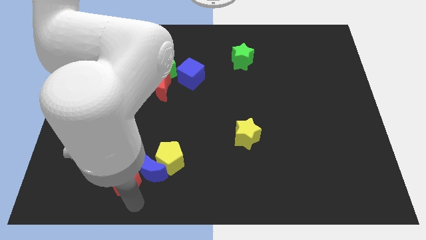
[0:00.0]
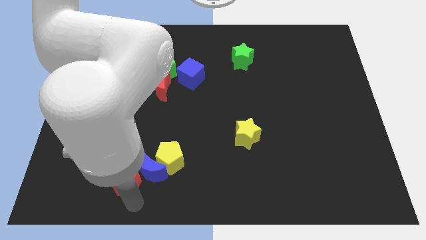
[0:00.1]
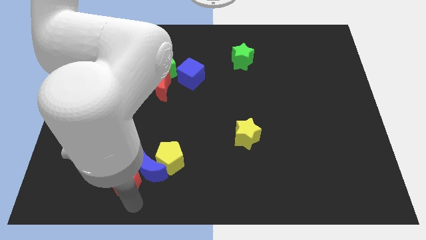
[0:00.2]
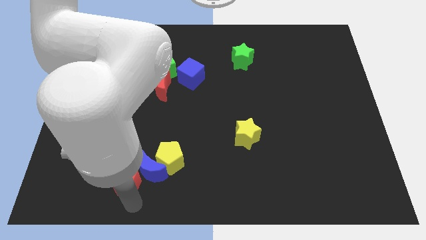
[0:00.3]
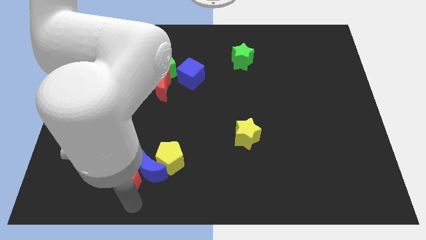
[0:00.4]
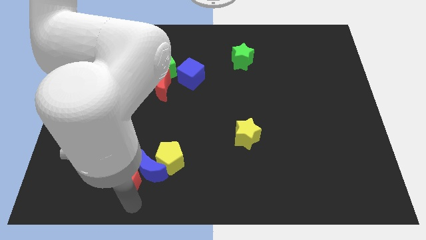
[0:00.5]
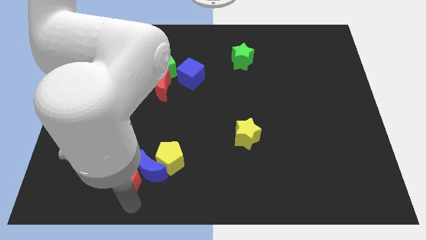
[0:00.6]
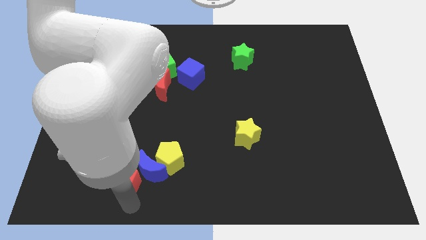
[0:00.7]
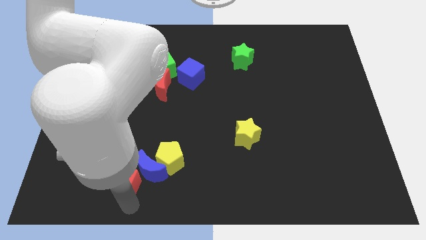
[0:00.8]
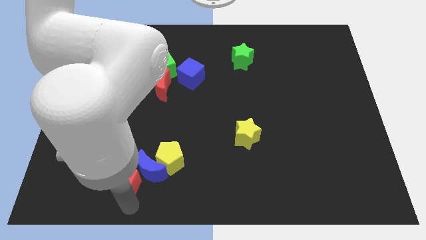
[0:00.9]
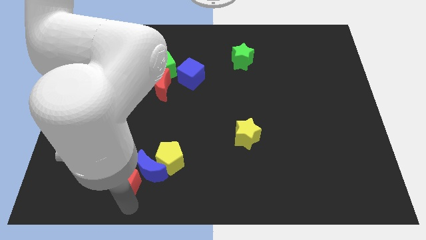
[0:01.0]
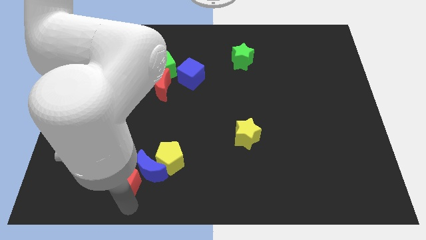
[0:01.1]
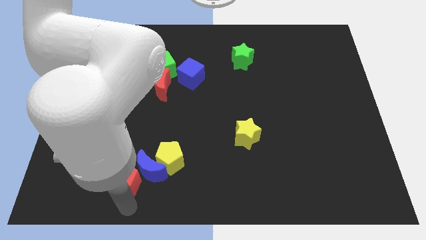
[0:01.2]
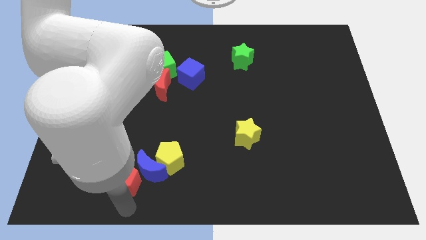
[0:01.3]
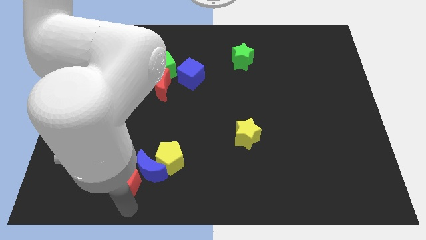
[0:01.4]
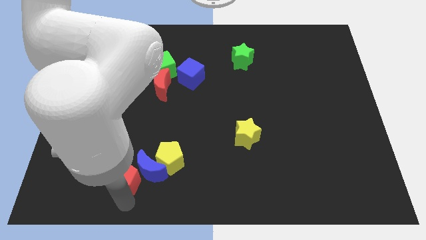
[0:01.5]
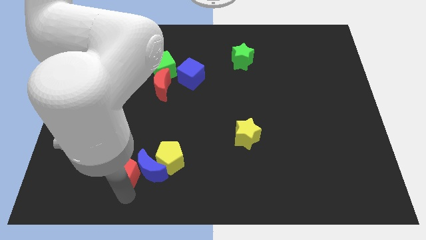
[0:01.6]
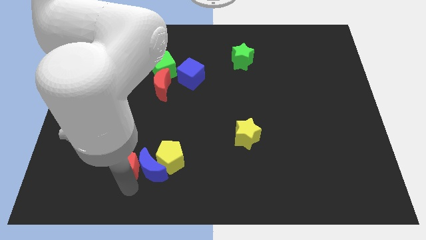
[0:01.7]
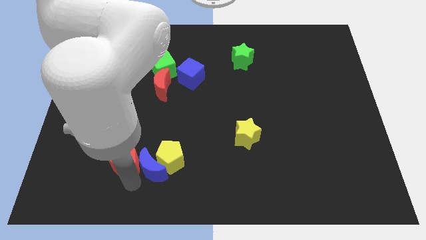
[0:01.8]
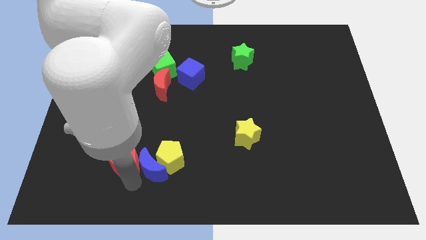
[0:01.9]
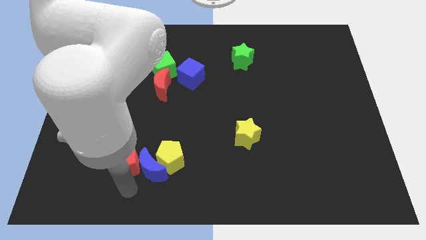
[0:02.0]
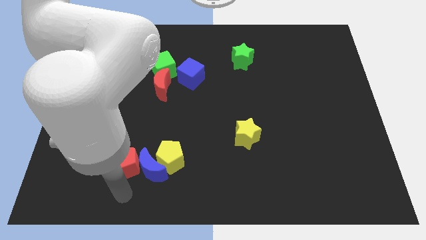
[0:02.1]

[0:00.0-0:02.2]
place the red pentagon at the left side of the blue moon

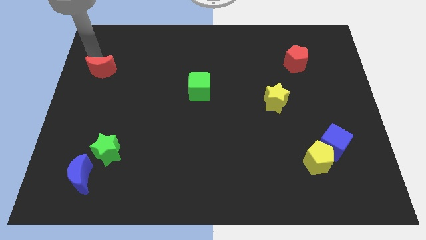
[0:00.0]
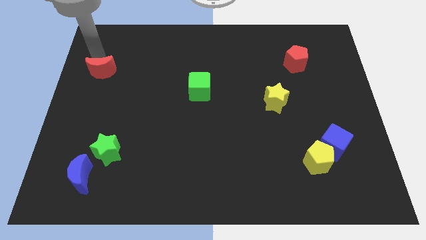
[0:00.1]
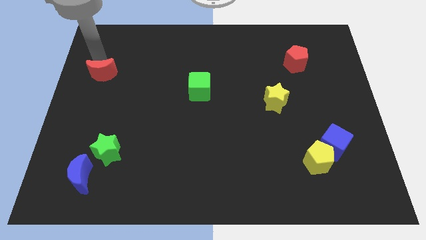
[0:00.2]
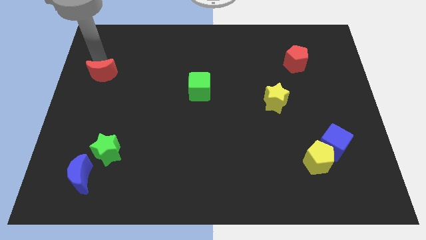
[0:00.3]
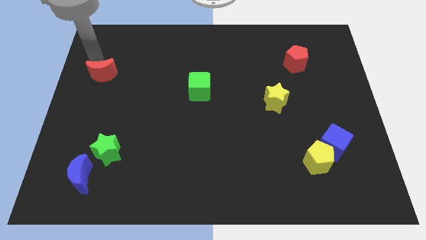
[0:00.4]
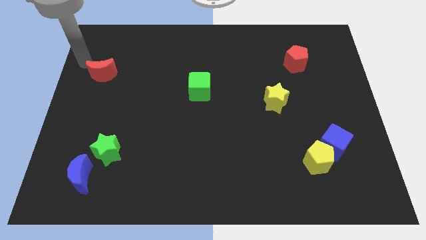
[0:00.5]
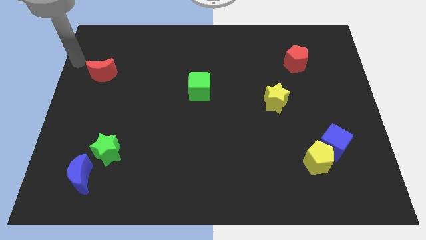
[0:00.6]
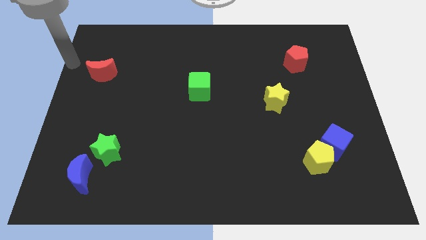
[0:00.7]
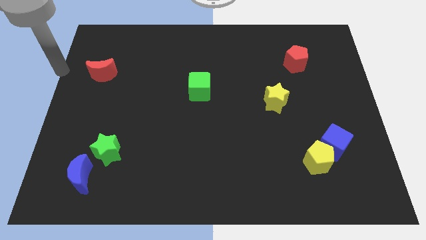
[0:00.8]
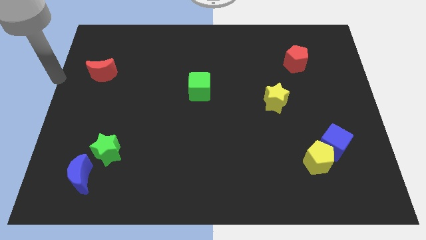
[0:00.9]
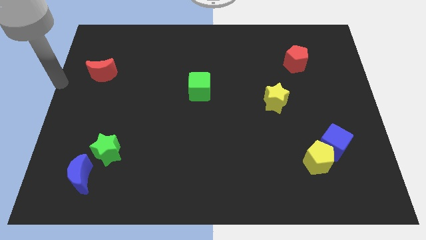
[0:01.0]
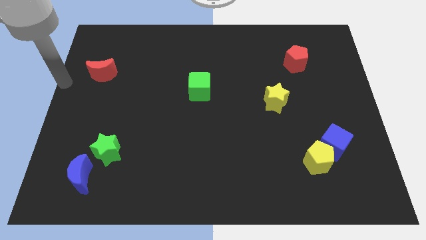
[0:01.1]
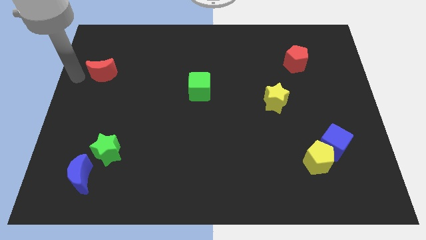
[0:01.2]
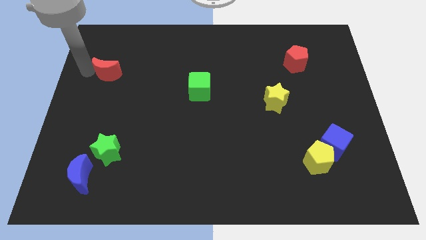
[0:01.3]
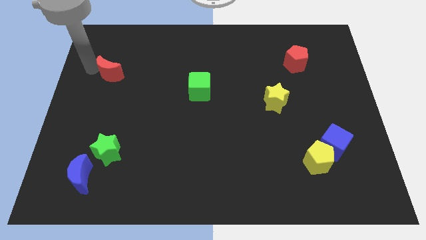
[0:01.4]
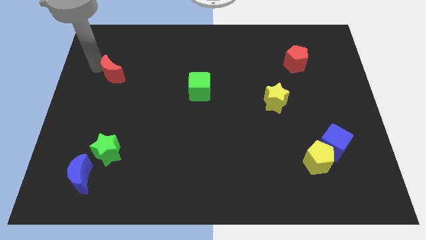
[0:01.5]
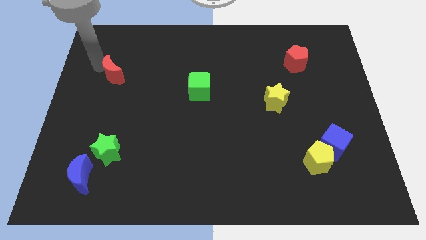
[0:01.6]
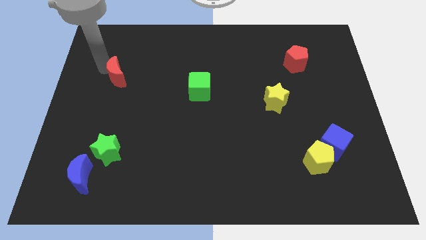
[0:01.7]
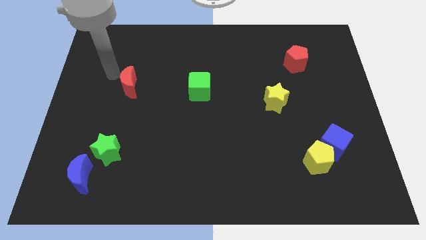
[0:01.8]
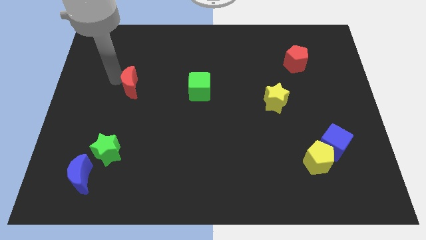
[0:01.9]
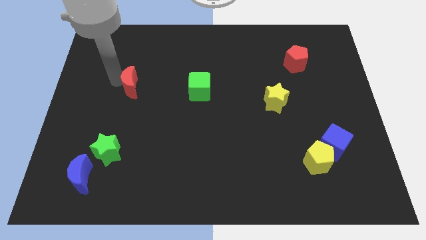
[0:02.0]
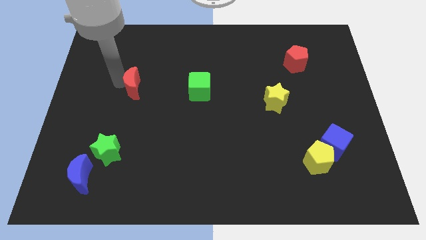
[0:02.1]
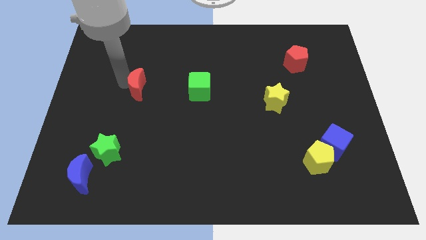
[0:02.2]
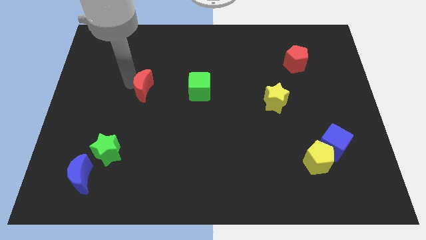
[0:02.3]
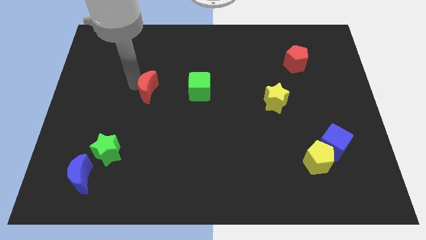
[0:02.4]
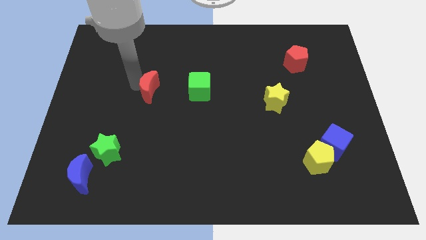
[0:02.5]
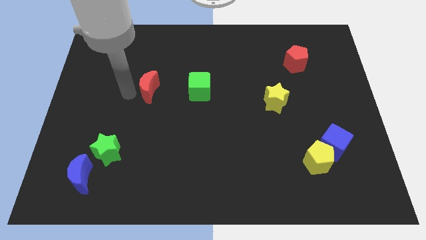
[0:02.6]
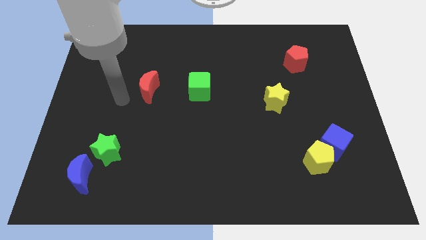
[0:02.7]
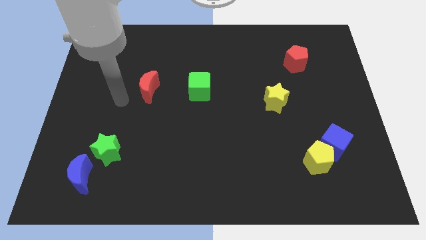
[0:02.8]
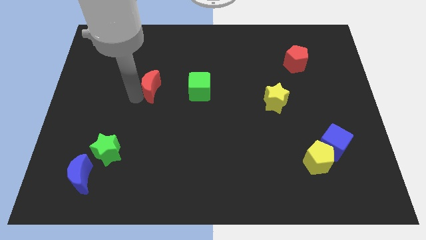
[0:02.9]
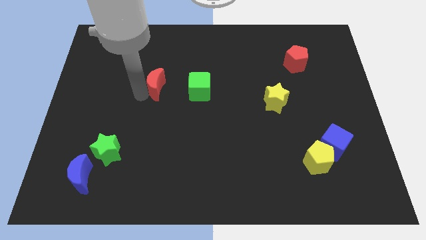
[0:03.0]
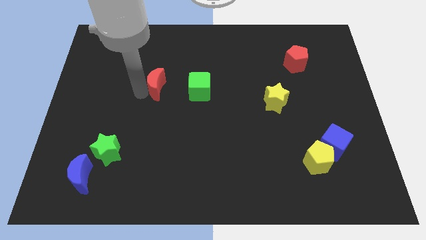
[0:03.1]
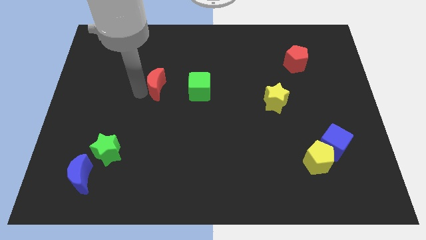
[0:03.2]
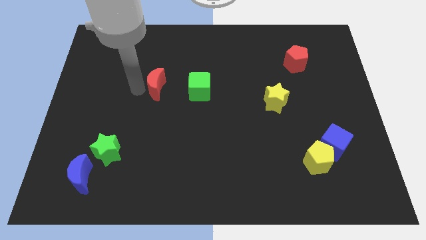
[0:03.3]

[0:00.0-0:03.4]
slide the red crescent towards the green cube

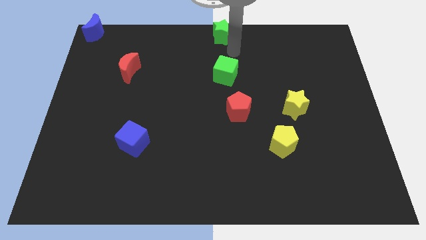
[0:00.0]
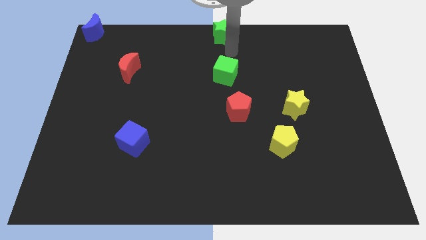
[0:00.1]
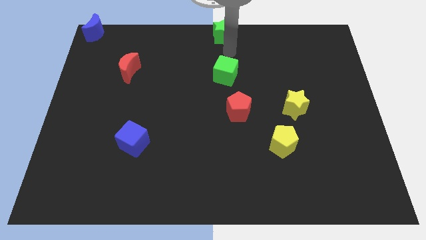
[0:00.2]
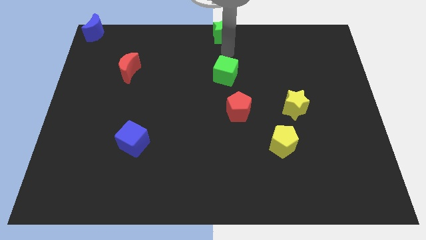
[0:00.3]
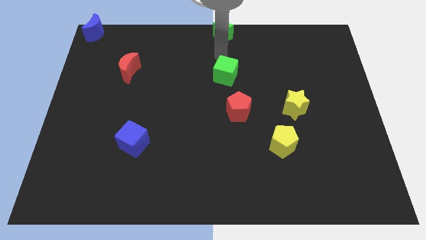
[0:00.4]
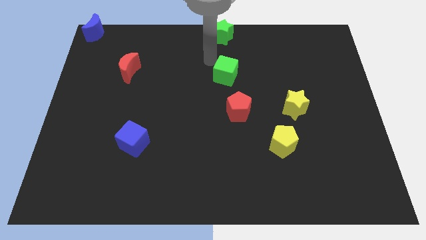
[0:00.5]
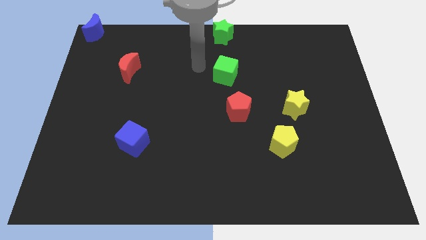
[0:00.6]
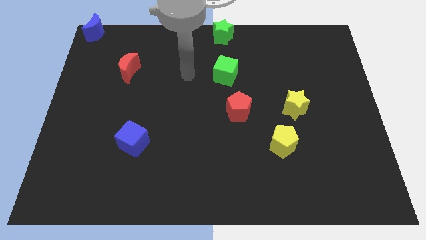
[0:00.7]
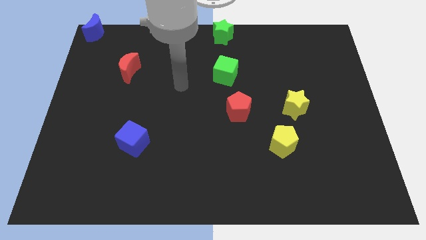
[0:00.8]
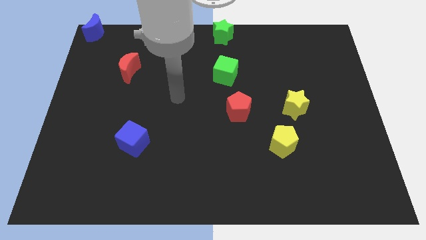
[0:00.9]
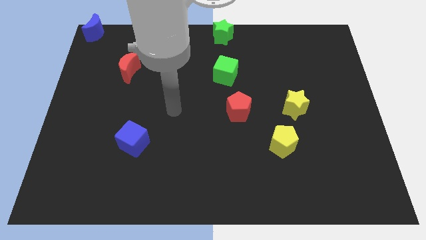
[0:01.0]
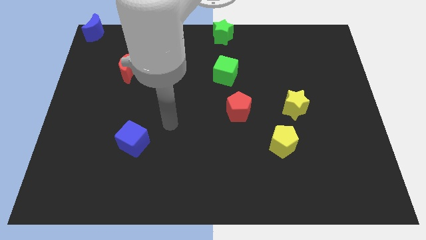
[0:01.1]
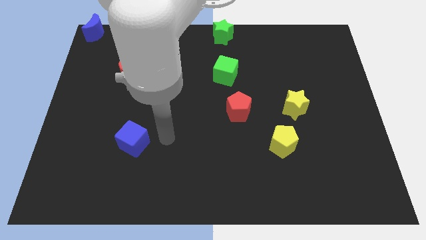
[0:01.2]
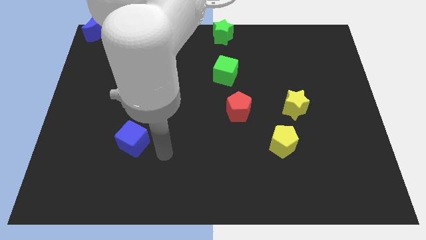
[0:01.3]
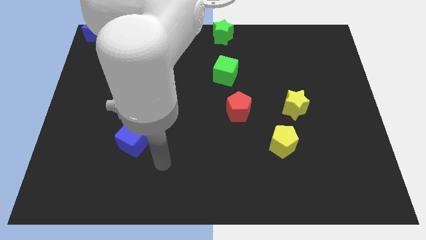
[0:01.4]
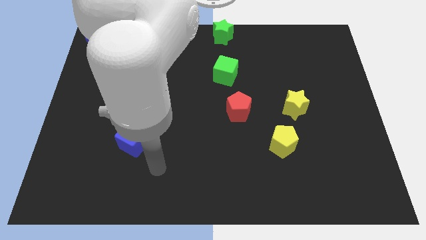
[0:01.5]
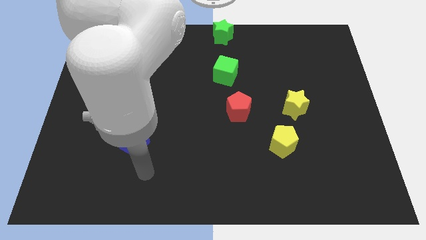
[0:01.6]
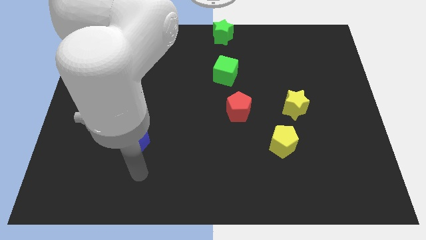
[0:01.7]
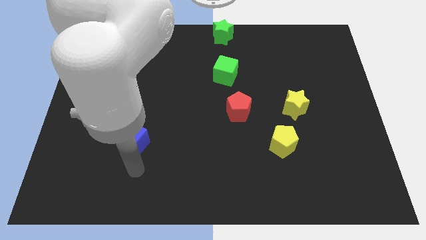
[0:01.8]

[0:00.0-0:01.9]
place the arm below the blue cube

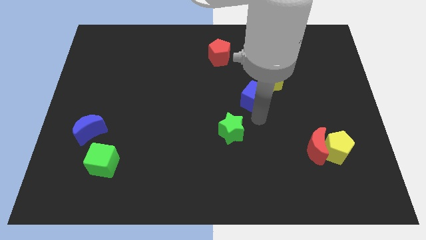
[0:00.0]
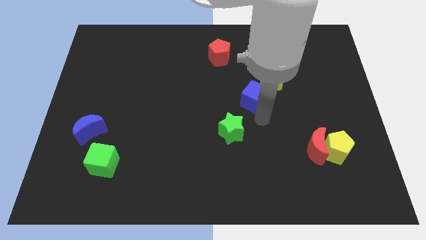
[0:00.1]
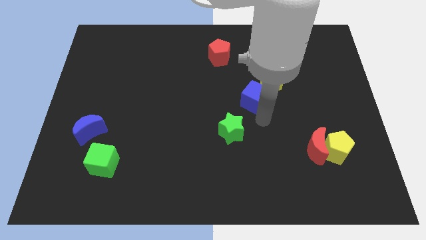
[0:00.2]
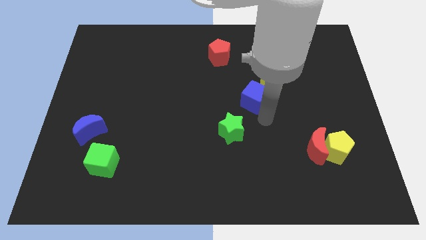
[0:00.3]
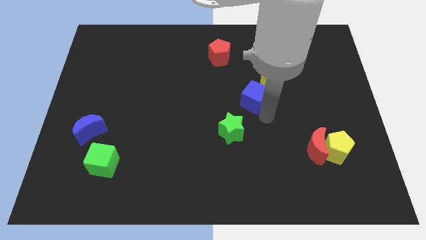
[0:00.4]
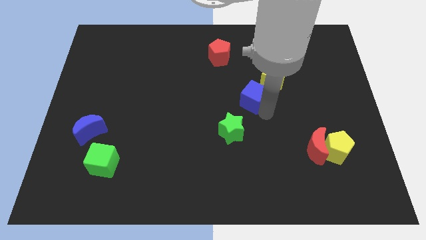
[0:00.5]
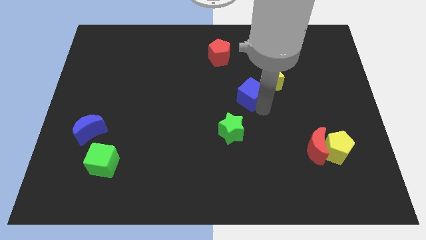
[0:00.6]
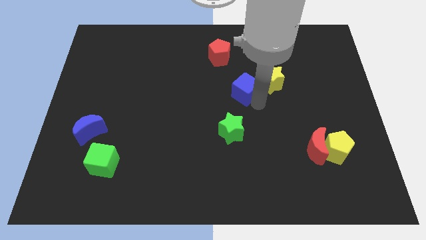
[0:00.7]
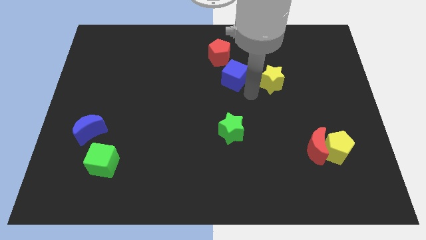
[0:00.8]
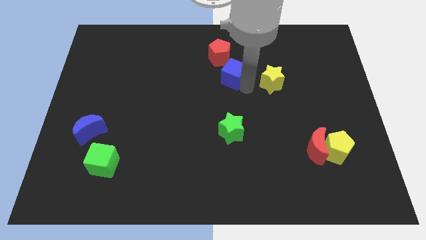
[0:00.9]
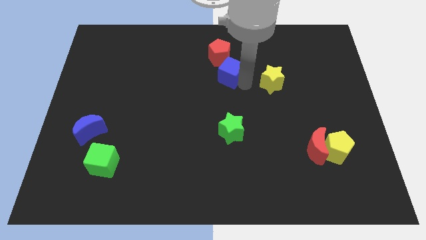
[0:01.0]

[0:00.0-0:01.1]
push blue cube towards red pentagon

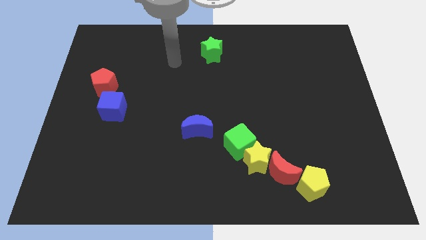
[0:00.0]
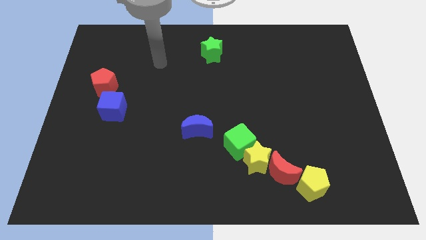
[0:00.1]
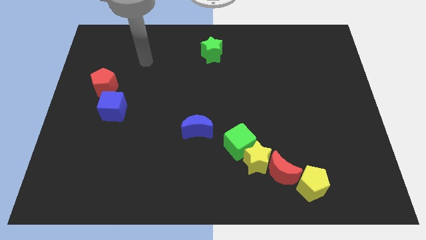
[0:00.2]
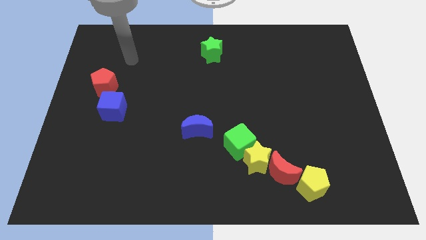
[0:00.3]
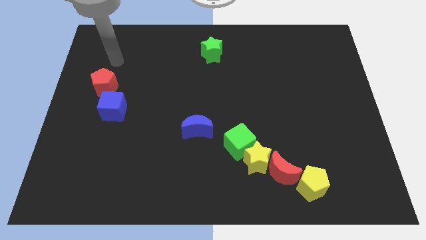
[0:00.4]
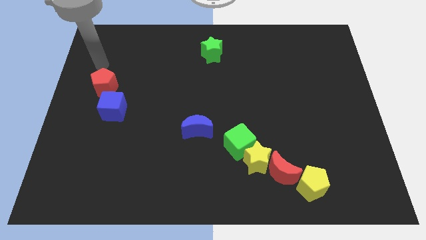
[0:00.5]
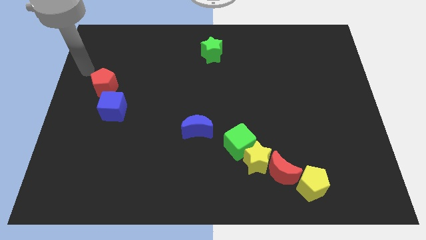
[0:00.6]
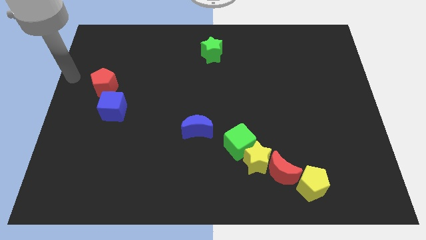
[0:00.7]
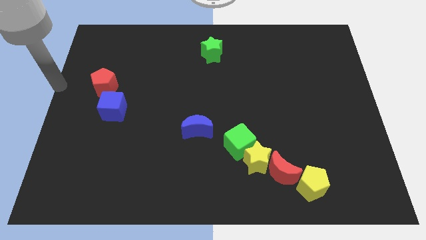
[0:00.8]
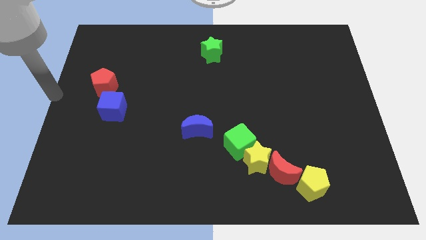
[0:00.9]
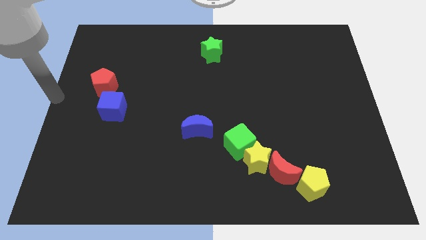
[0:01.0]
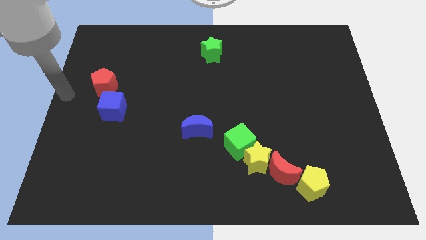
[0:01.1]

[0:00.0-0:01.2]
move your arm towards the left center side of the board
